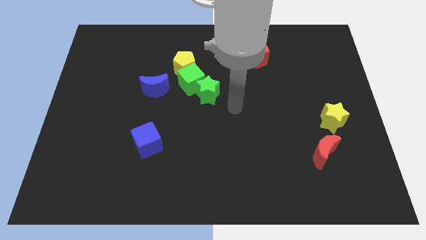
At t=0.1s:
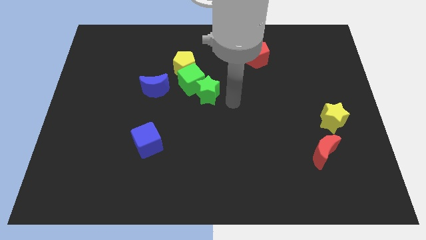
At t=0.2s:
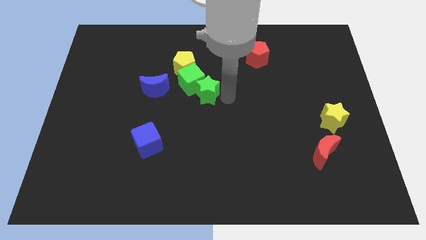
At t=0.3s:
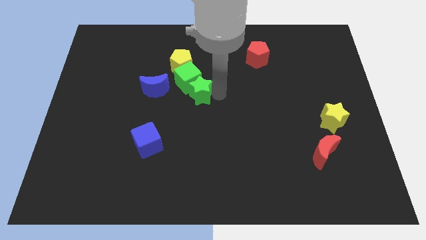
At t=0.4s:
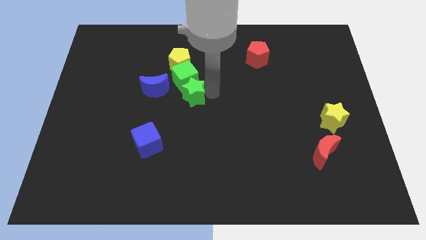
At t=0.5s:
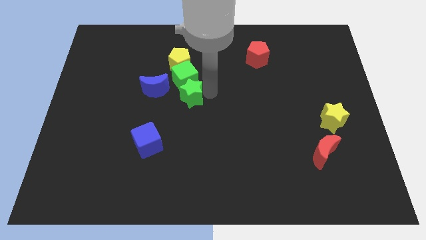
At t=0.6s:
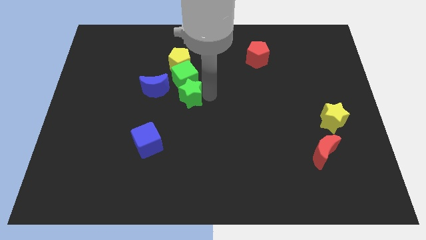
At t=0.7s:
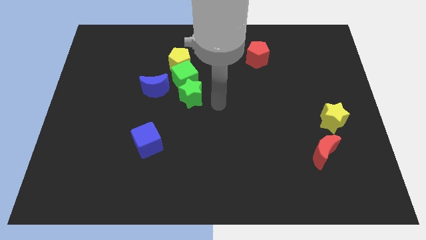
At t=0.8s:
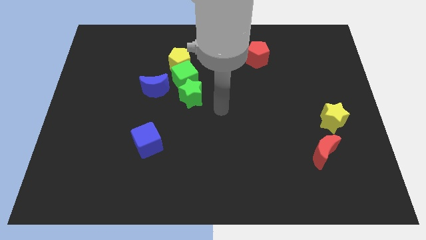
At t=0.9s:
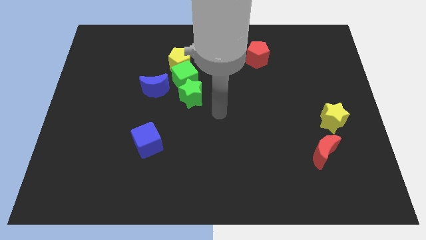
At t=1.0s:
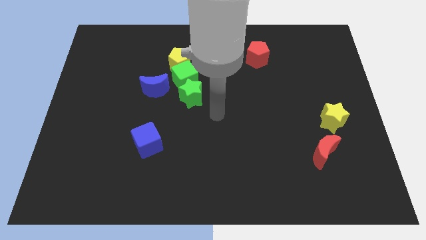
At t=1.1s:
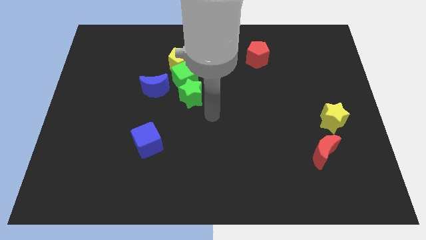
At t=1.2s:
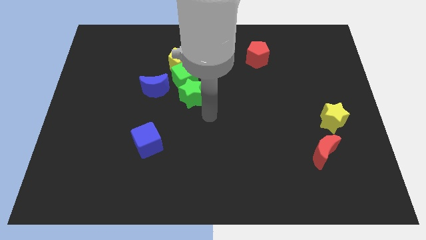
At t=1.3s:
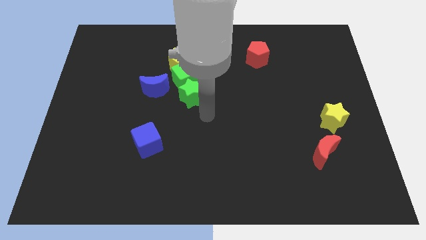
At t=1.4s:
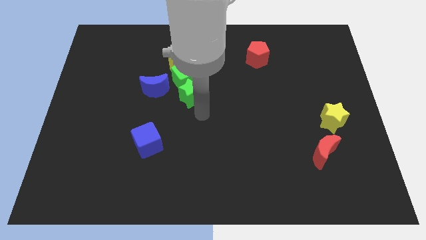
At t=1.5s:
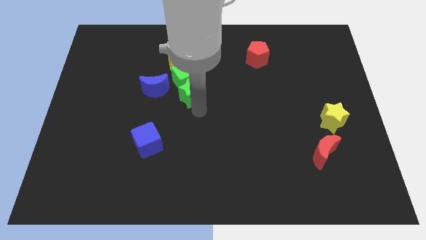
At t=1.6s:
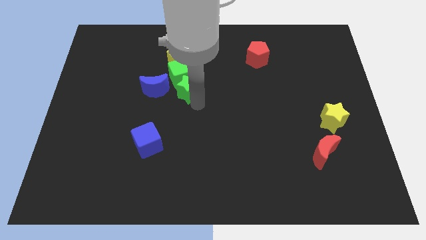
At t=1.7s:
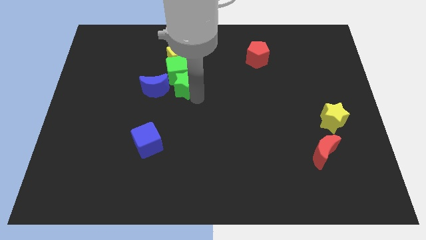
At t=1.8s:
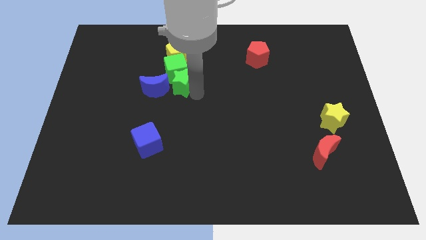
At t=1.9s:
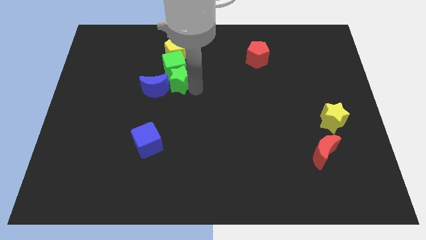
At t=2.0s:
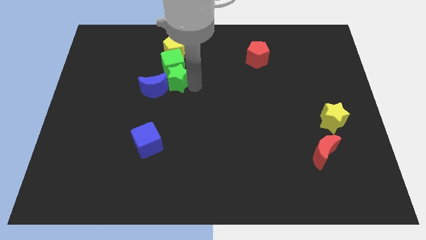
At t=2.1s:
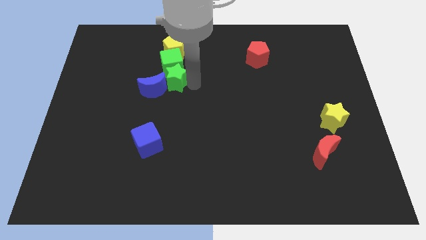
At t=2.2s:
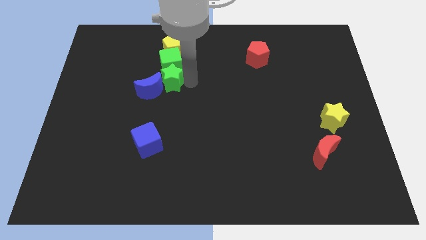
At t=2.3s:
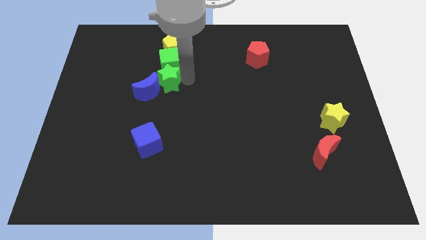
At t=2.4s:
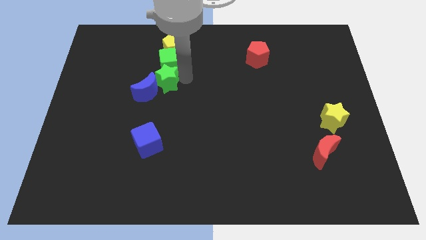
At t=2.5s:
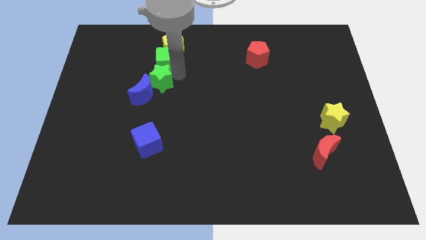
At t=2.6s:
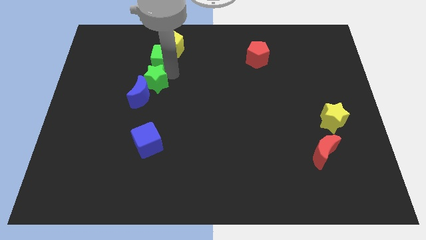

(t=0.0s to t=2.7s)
place green star green cube and yellow pentagon in a diagonal line

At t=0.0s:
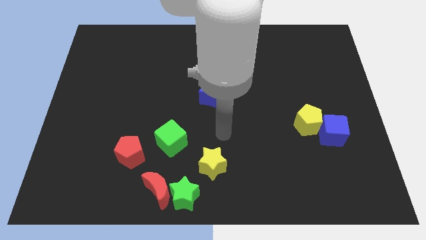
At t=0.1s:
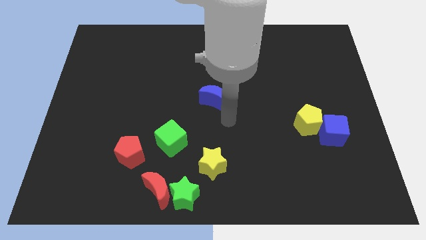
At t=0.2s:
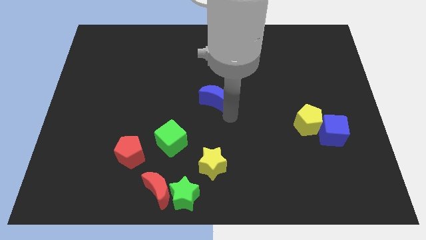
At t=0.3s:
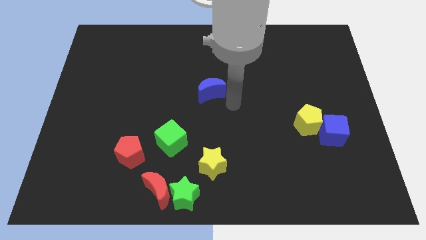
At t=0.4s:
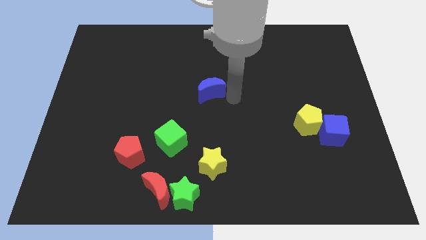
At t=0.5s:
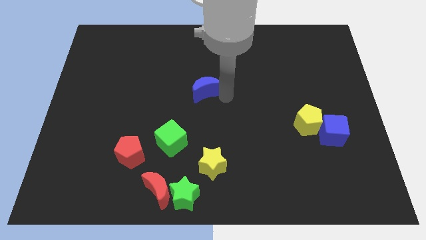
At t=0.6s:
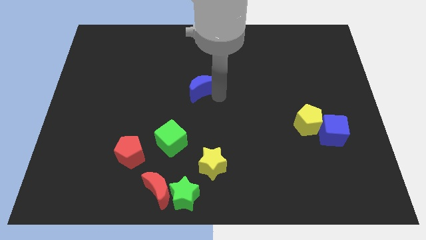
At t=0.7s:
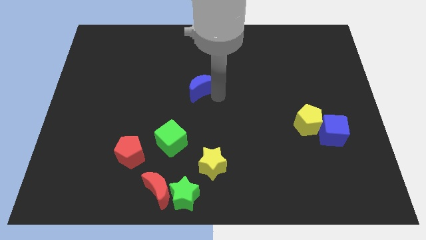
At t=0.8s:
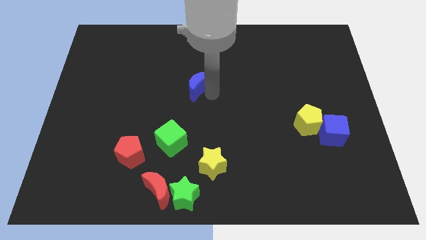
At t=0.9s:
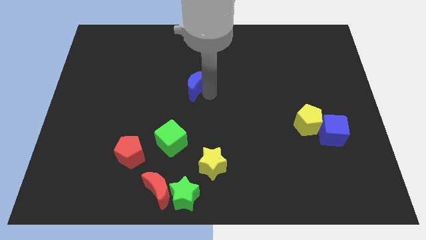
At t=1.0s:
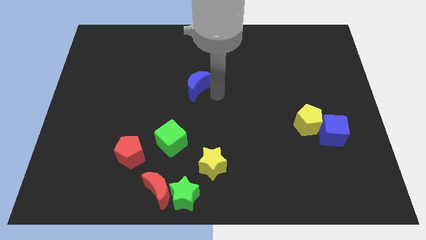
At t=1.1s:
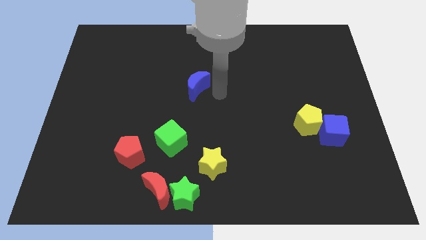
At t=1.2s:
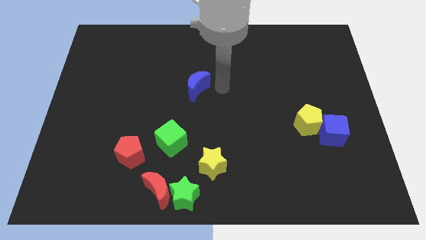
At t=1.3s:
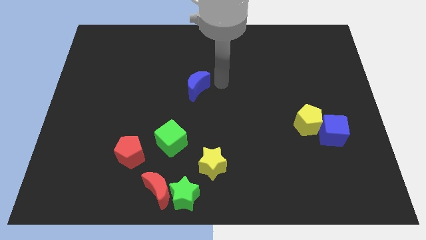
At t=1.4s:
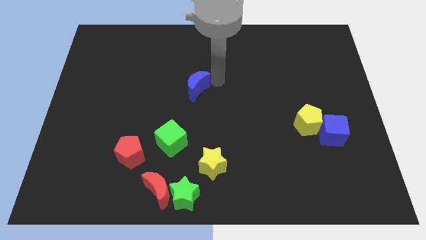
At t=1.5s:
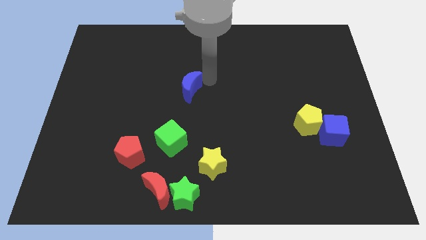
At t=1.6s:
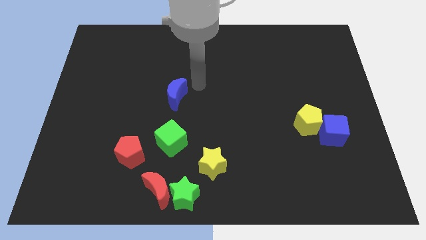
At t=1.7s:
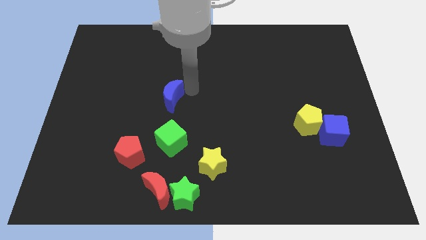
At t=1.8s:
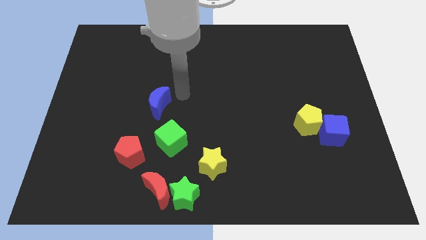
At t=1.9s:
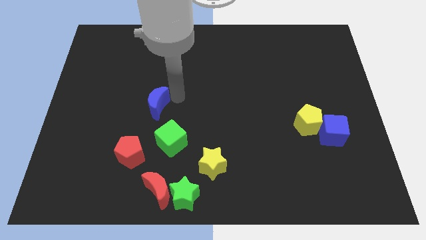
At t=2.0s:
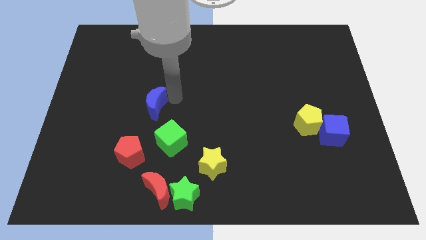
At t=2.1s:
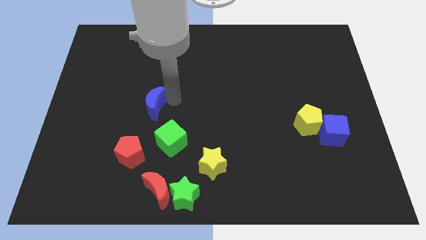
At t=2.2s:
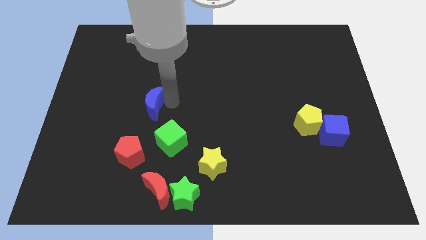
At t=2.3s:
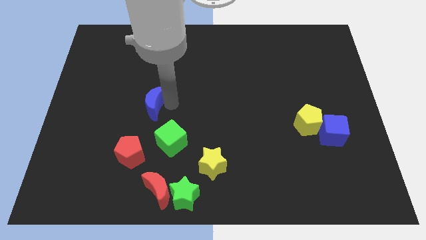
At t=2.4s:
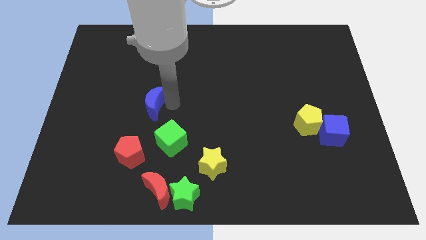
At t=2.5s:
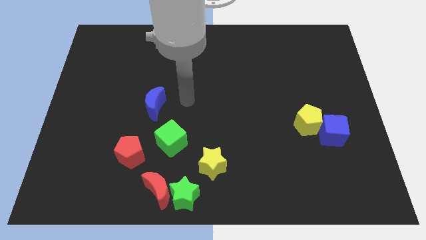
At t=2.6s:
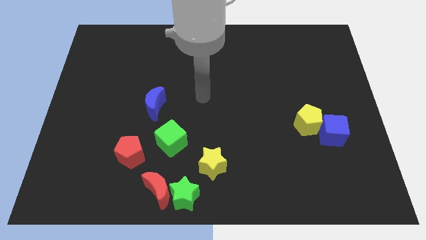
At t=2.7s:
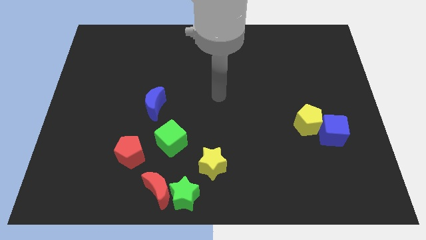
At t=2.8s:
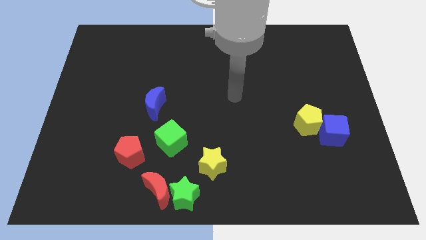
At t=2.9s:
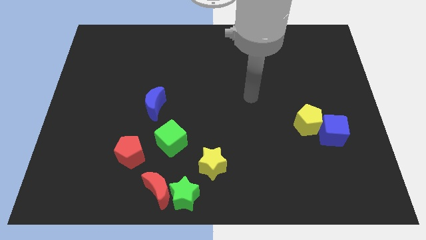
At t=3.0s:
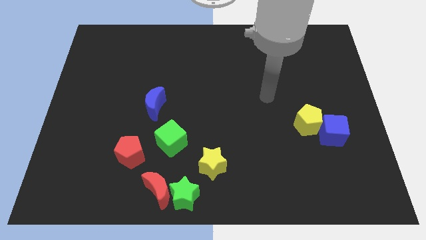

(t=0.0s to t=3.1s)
slide blue moon to the top left of green cube

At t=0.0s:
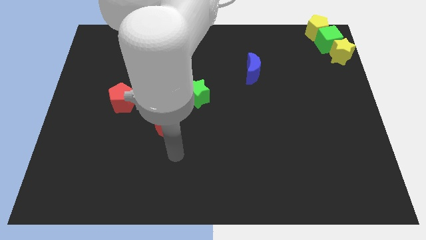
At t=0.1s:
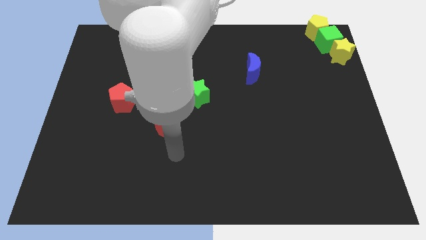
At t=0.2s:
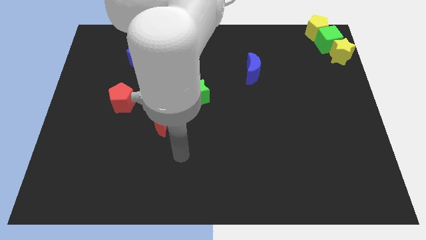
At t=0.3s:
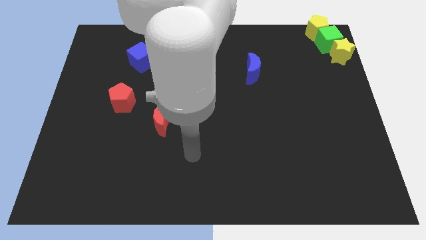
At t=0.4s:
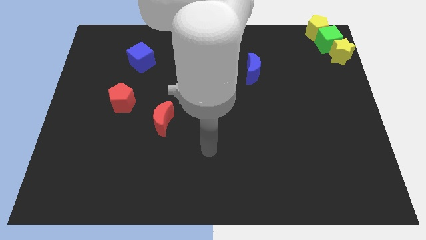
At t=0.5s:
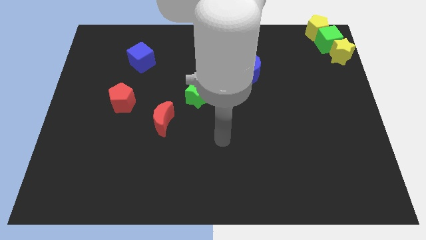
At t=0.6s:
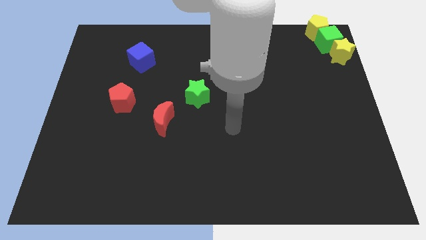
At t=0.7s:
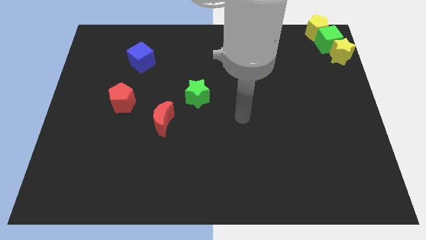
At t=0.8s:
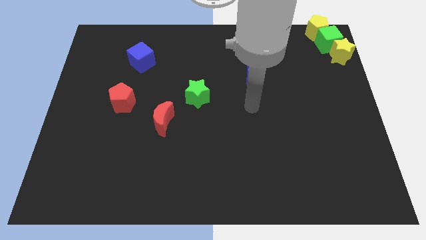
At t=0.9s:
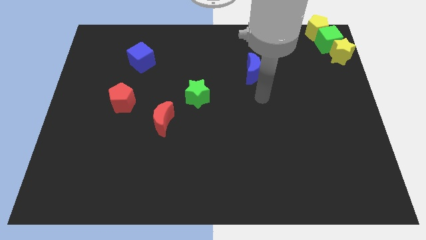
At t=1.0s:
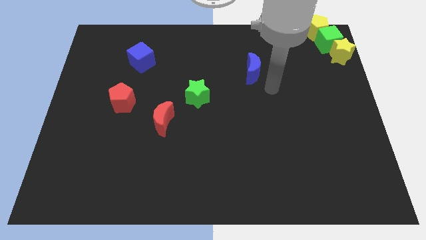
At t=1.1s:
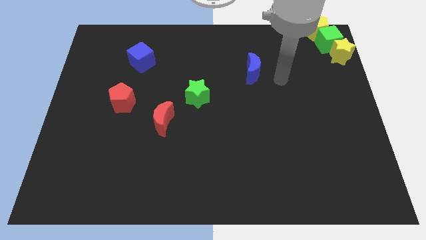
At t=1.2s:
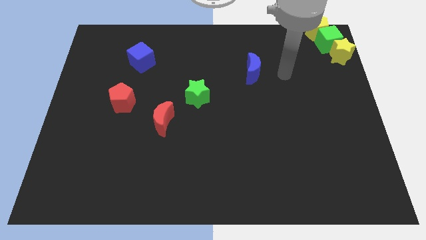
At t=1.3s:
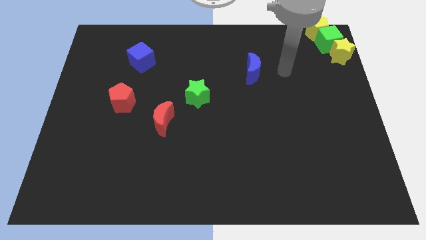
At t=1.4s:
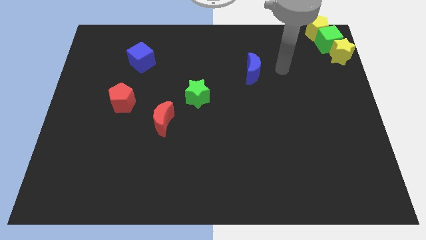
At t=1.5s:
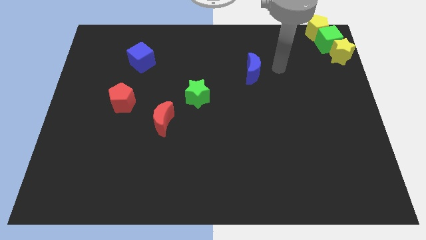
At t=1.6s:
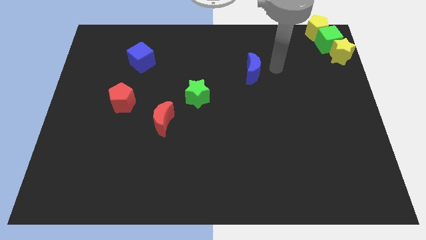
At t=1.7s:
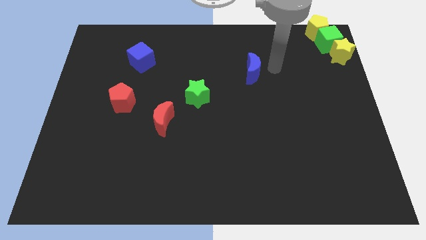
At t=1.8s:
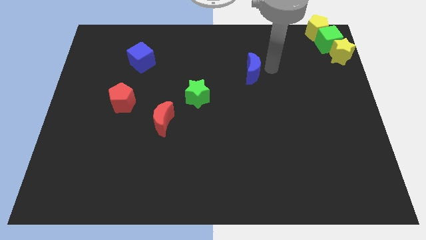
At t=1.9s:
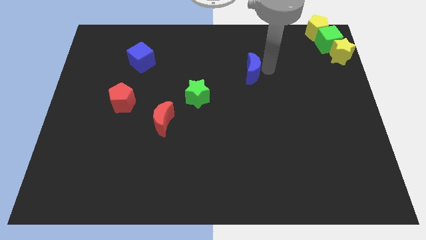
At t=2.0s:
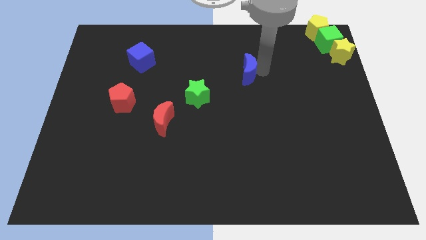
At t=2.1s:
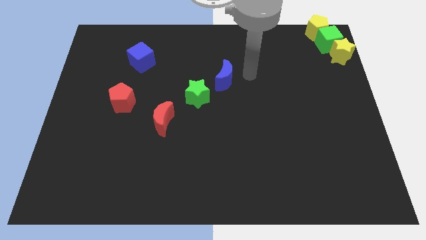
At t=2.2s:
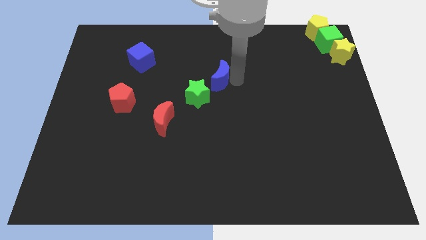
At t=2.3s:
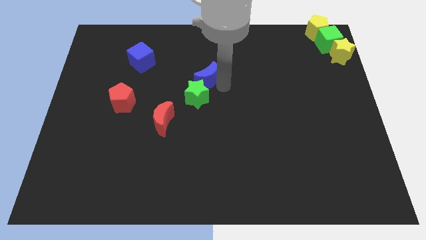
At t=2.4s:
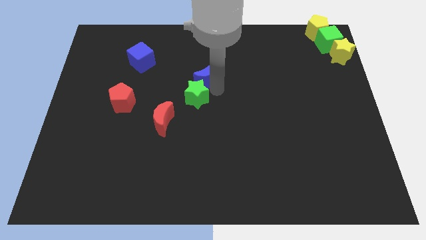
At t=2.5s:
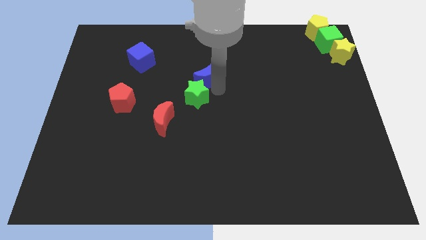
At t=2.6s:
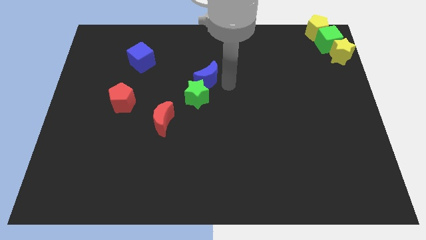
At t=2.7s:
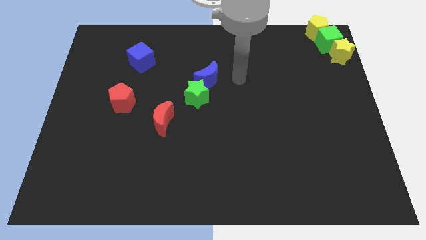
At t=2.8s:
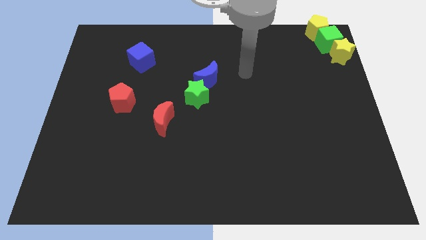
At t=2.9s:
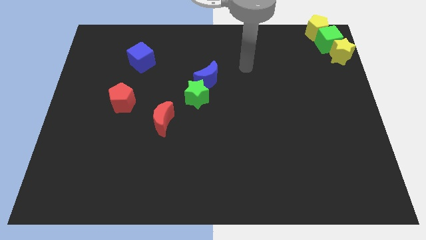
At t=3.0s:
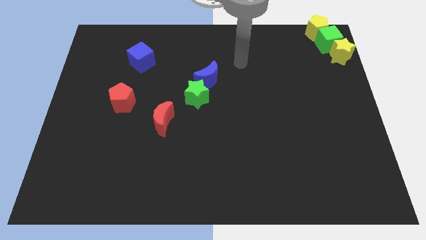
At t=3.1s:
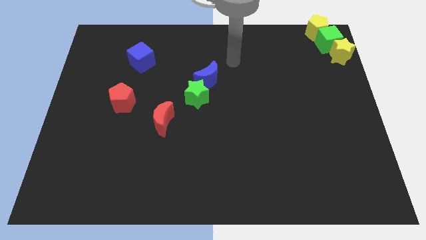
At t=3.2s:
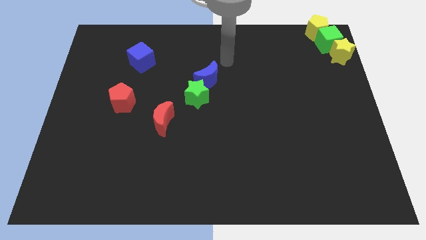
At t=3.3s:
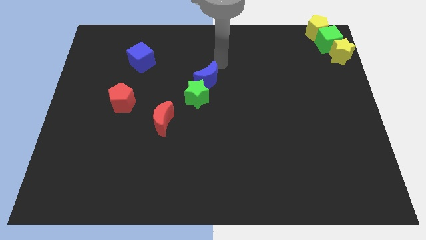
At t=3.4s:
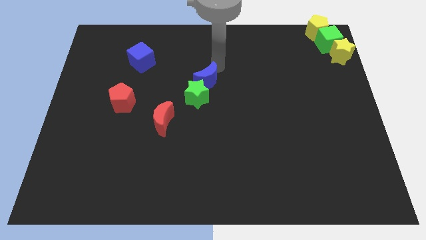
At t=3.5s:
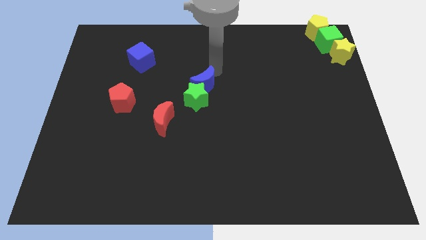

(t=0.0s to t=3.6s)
put the blue crescent above the green star
